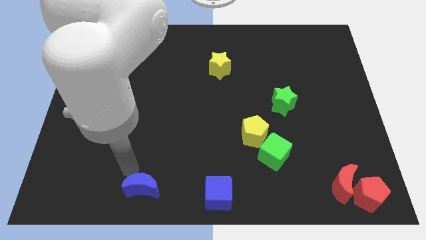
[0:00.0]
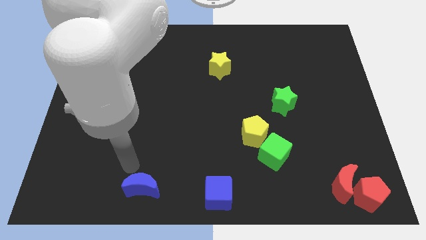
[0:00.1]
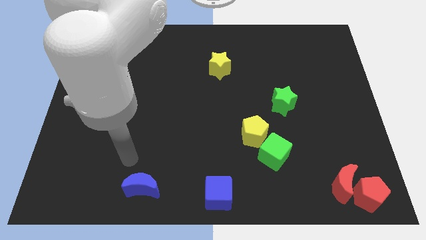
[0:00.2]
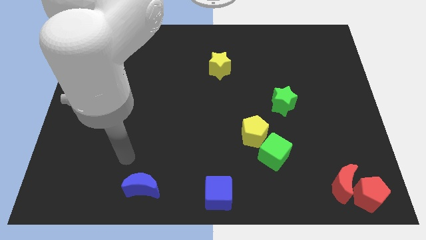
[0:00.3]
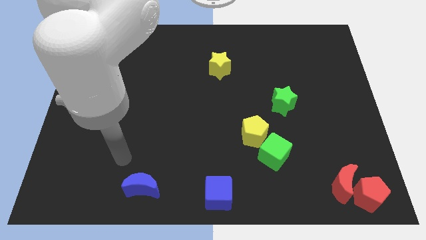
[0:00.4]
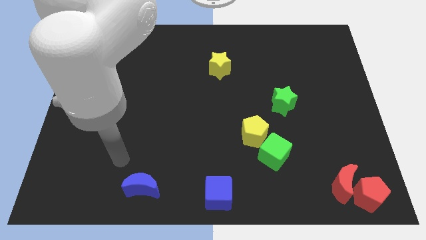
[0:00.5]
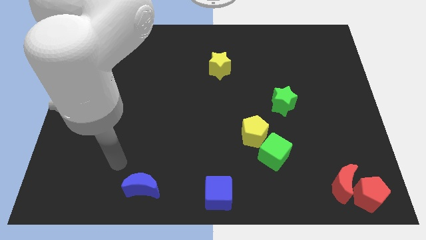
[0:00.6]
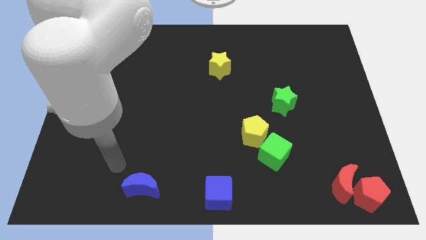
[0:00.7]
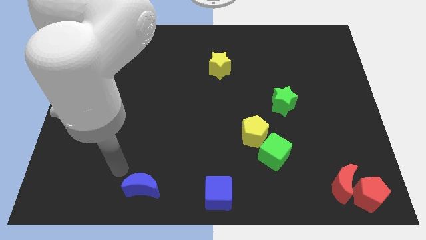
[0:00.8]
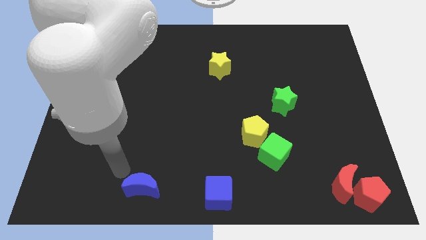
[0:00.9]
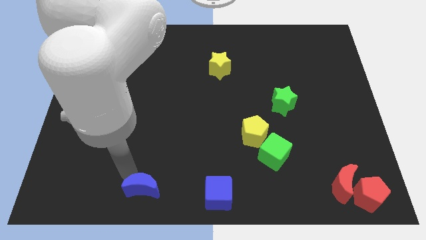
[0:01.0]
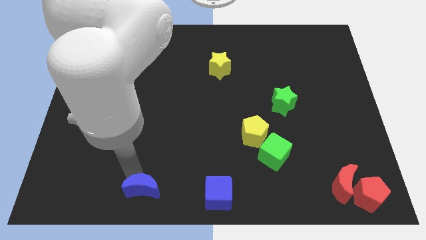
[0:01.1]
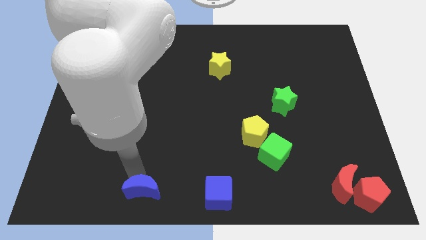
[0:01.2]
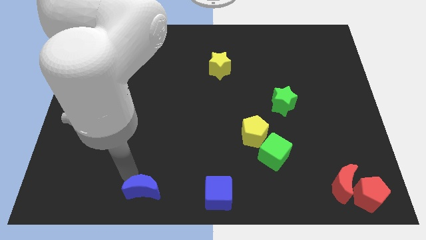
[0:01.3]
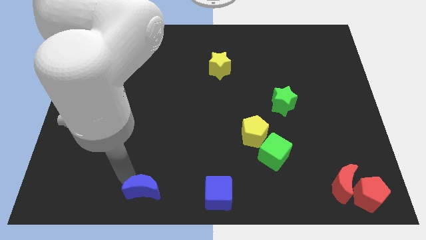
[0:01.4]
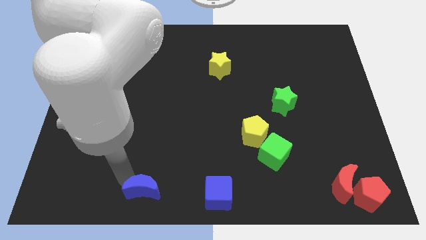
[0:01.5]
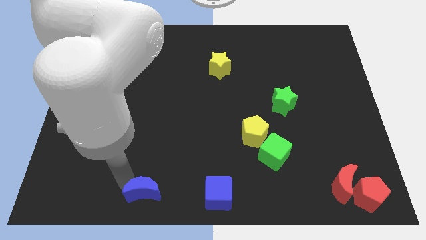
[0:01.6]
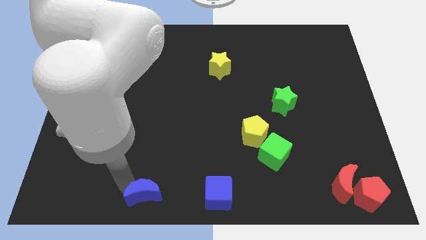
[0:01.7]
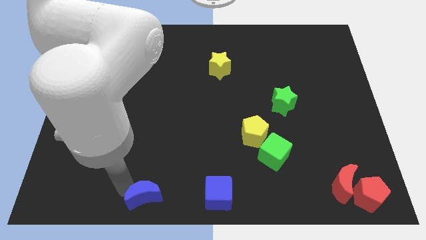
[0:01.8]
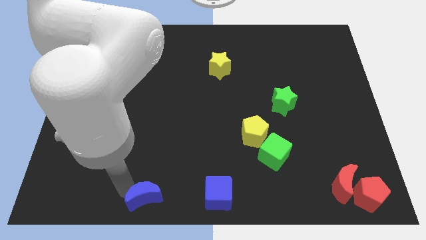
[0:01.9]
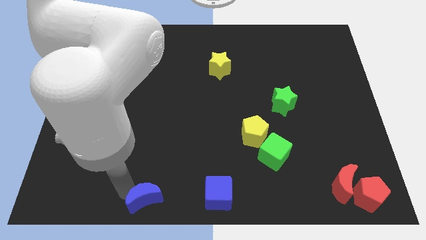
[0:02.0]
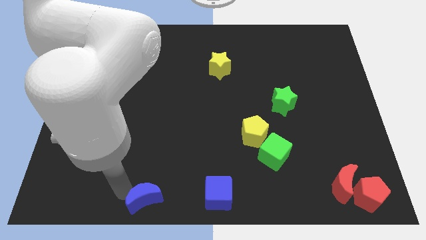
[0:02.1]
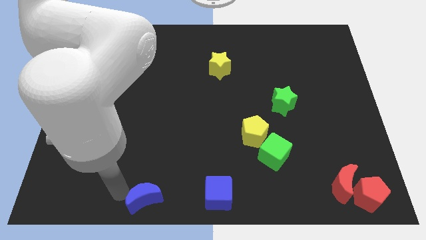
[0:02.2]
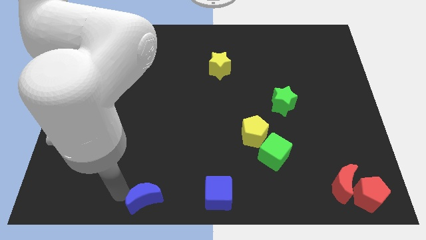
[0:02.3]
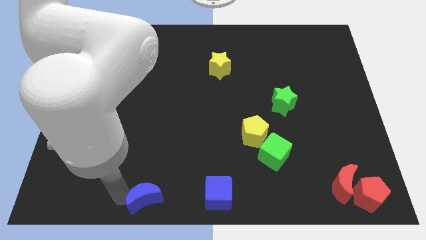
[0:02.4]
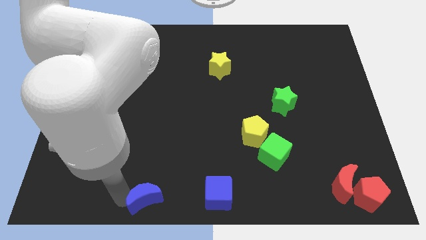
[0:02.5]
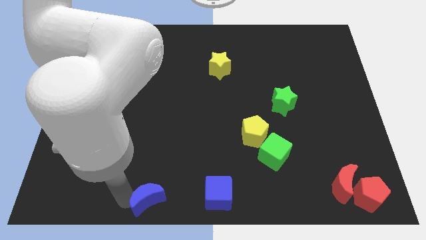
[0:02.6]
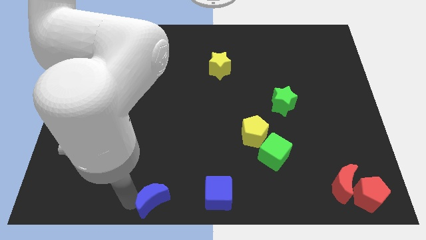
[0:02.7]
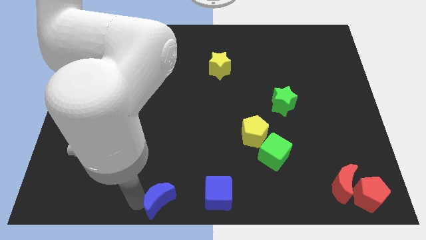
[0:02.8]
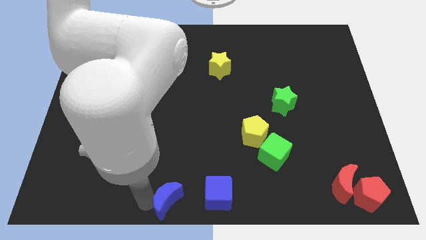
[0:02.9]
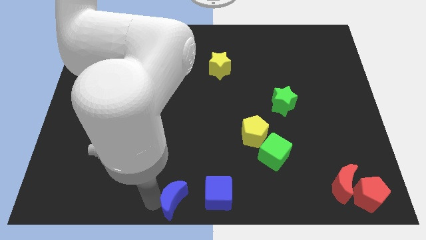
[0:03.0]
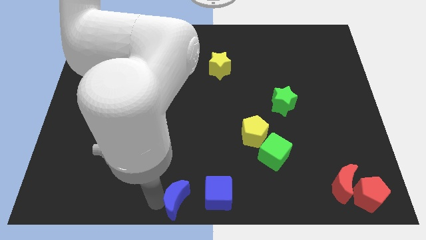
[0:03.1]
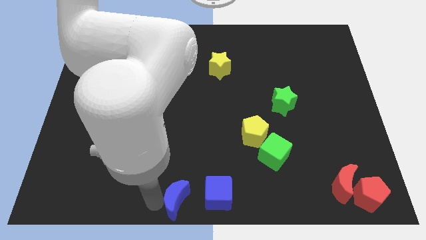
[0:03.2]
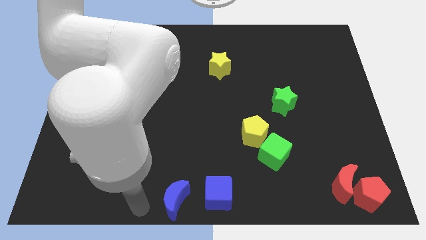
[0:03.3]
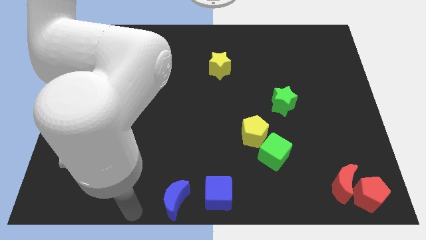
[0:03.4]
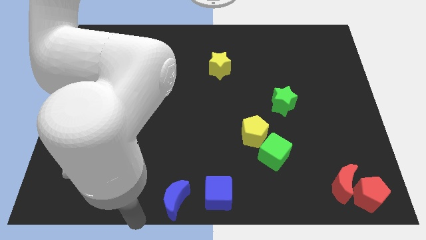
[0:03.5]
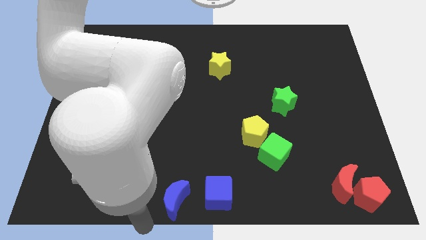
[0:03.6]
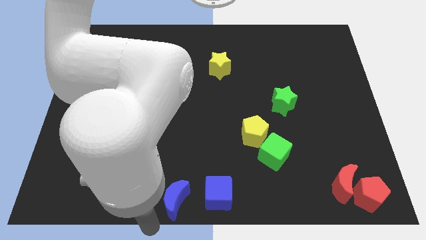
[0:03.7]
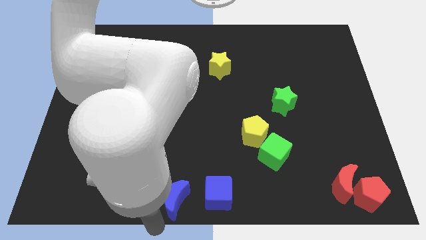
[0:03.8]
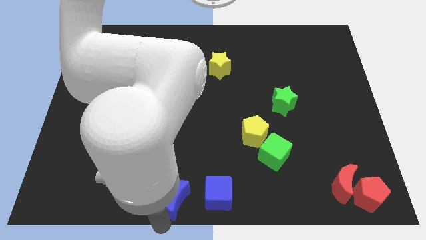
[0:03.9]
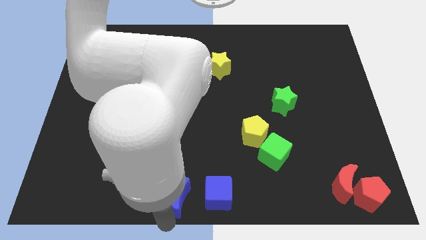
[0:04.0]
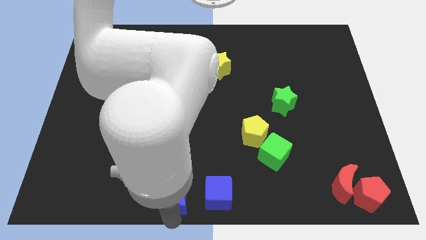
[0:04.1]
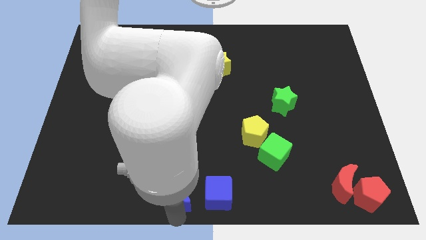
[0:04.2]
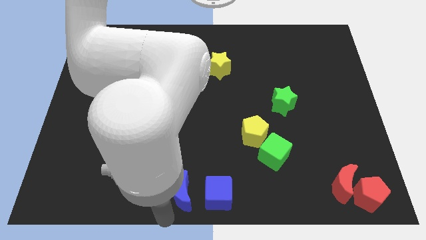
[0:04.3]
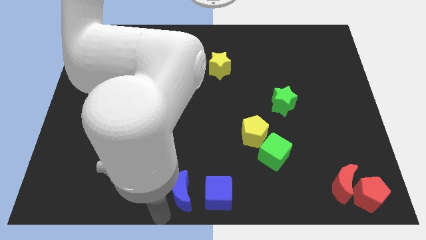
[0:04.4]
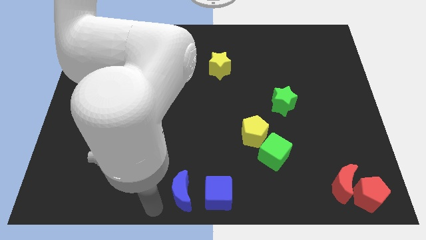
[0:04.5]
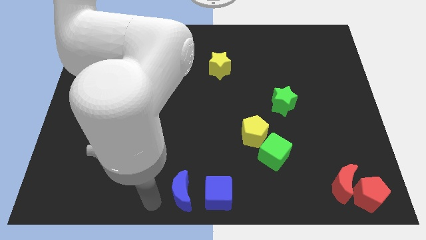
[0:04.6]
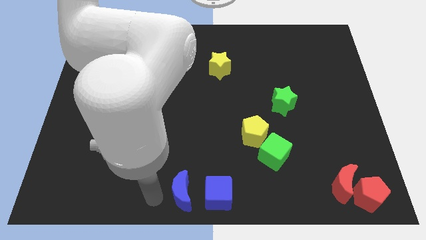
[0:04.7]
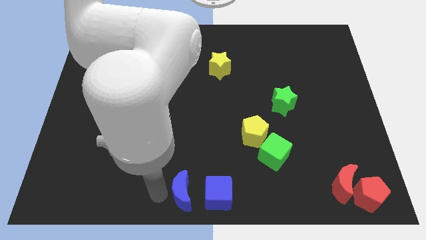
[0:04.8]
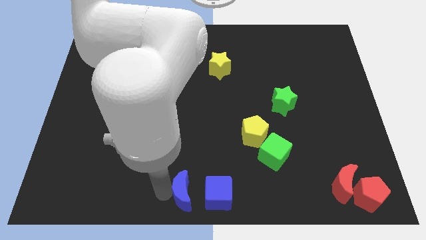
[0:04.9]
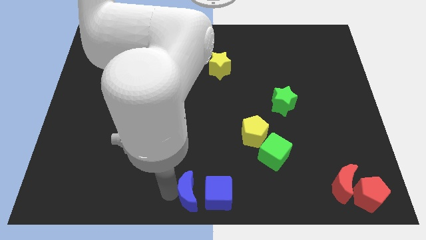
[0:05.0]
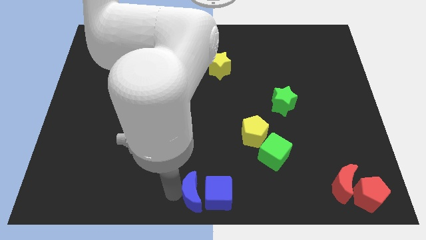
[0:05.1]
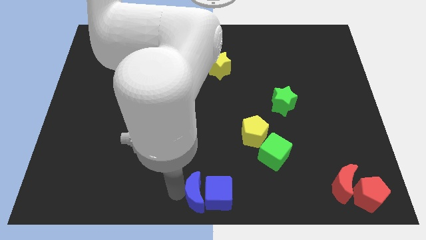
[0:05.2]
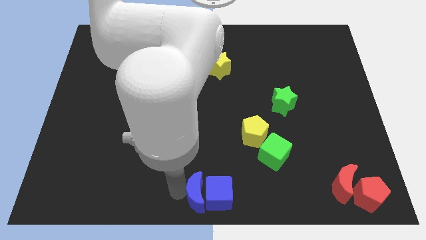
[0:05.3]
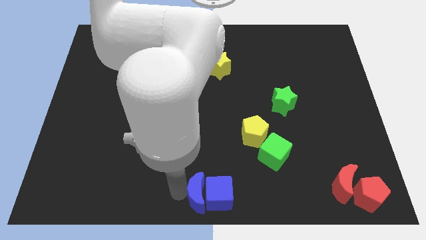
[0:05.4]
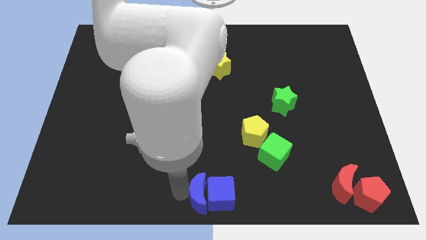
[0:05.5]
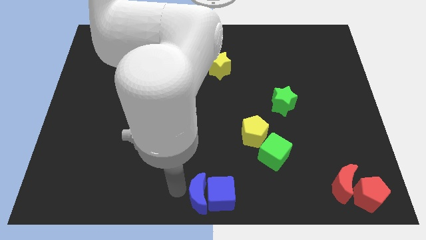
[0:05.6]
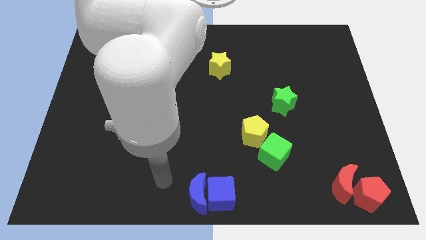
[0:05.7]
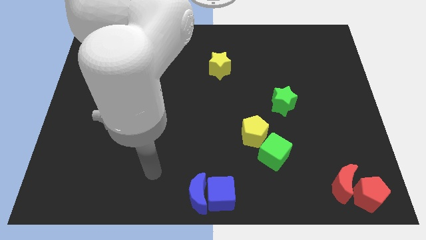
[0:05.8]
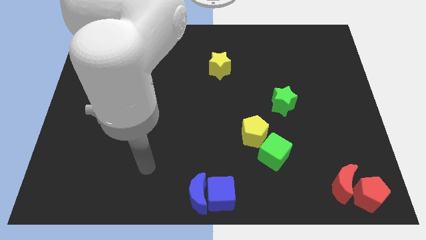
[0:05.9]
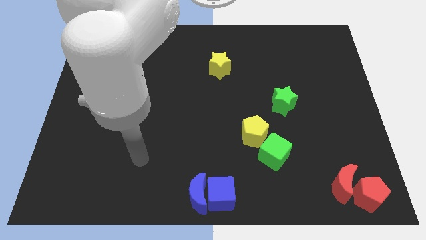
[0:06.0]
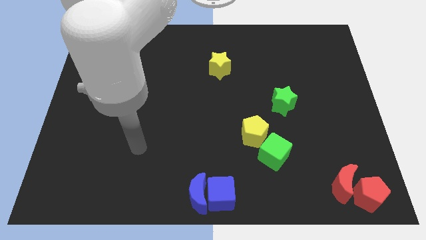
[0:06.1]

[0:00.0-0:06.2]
move blue moon close to the blue cube

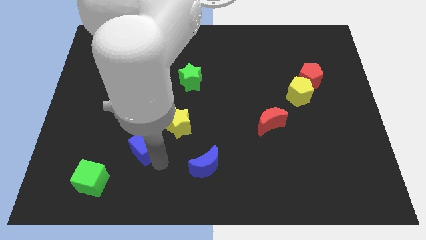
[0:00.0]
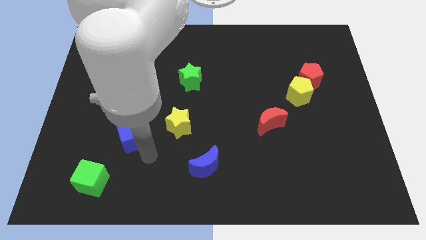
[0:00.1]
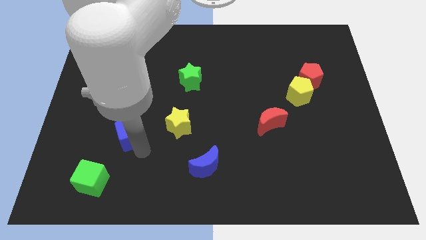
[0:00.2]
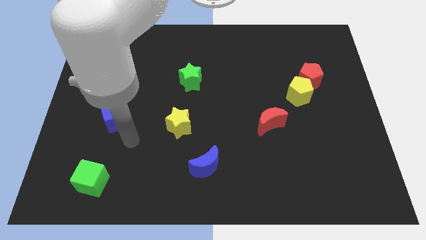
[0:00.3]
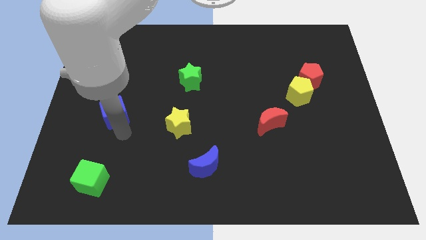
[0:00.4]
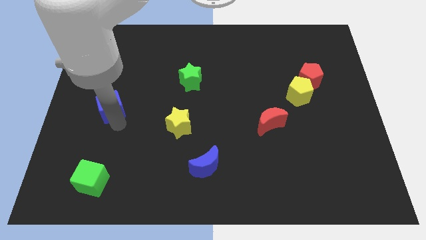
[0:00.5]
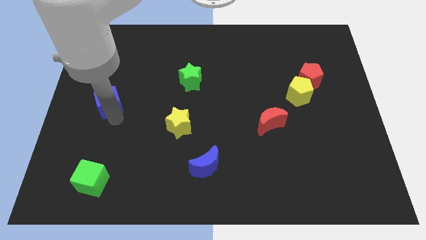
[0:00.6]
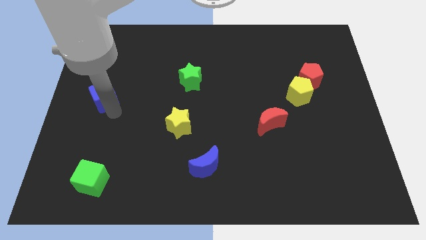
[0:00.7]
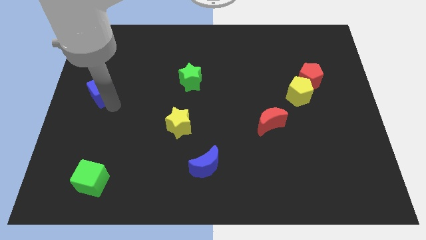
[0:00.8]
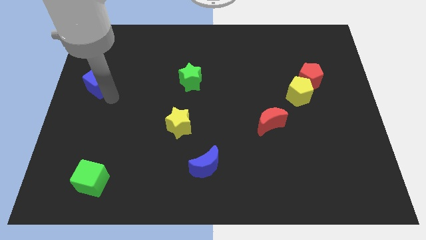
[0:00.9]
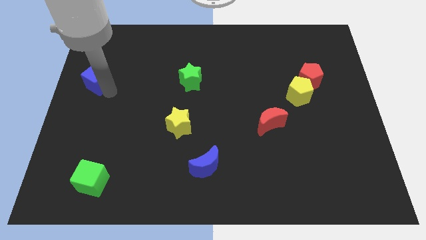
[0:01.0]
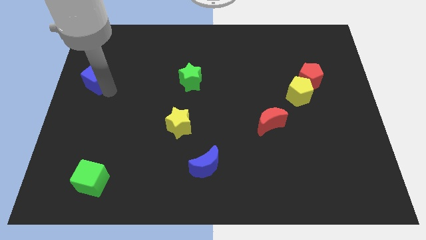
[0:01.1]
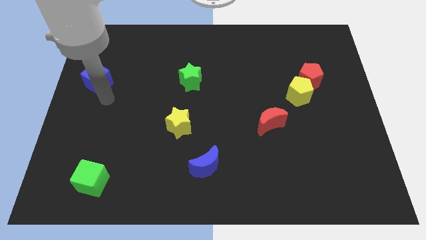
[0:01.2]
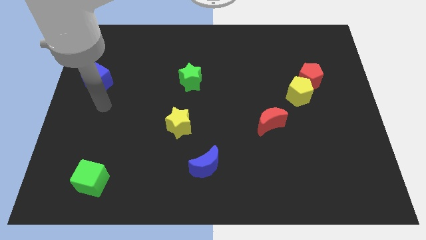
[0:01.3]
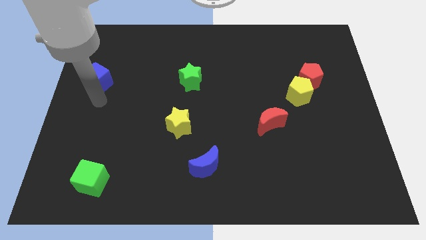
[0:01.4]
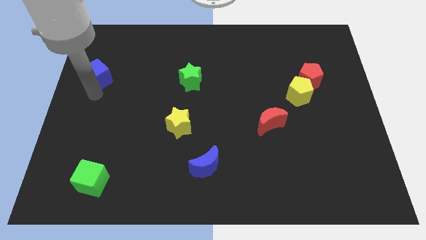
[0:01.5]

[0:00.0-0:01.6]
push the blue cube upward

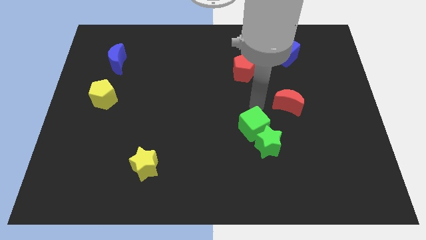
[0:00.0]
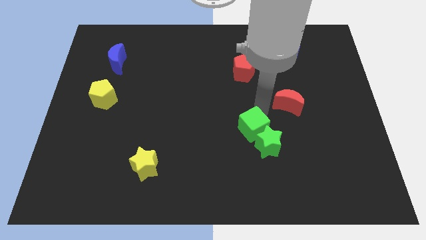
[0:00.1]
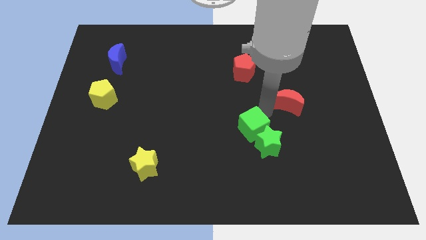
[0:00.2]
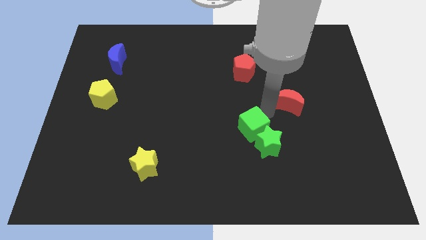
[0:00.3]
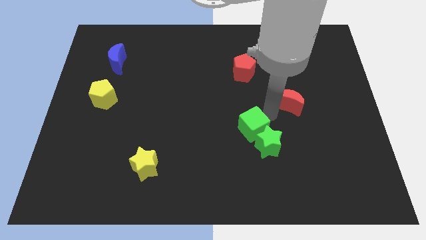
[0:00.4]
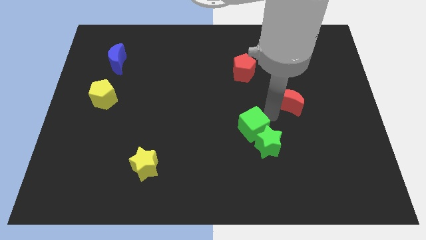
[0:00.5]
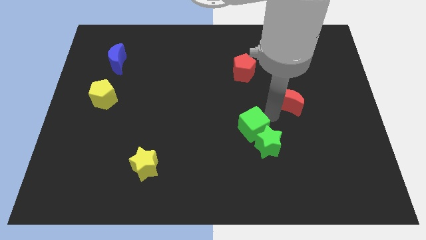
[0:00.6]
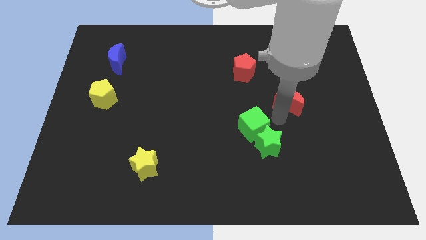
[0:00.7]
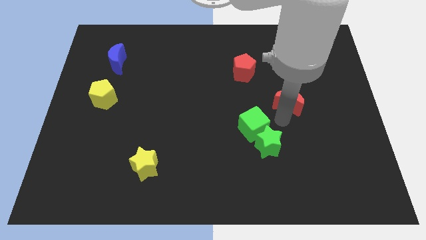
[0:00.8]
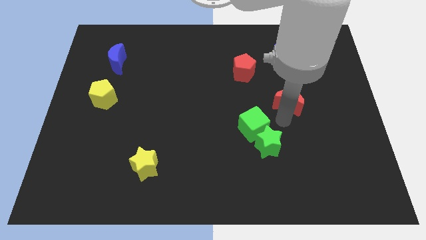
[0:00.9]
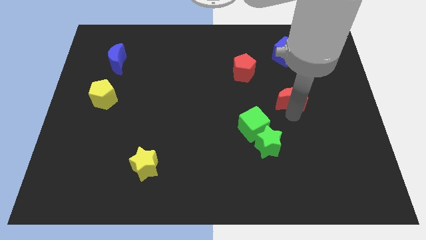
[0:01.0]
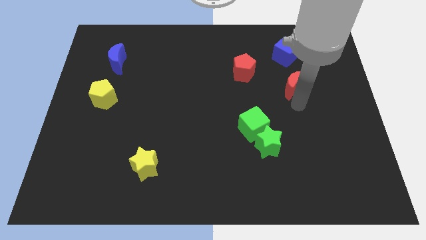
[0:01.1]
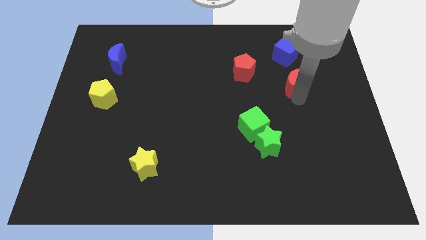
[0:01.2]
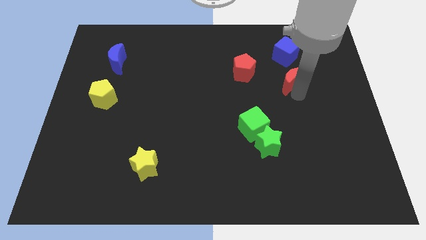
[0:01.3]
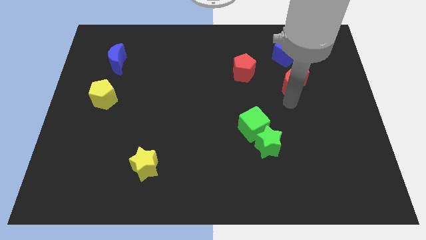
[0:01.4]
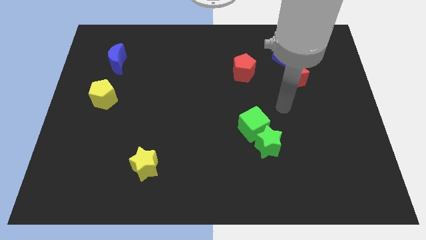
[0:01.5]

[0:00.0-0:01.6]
place the red crescent vertically below blue cube
